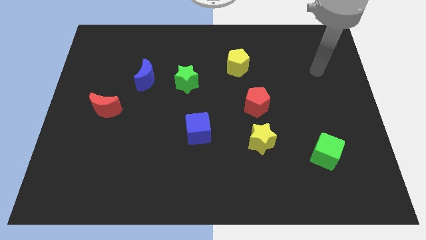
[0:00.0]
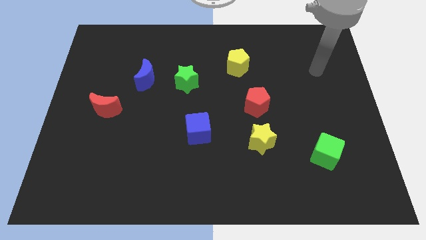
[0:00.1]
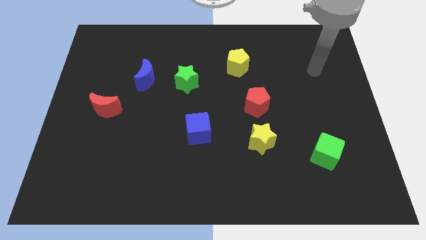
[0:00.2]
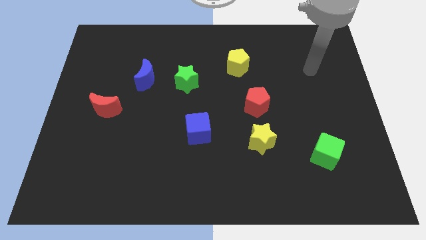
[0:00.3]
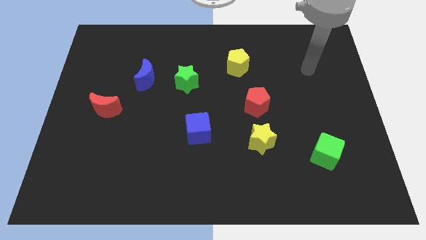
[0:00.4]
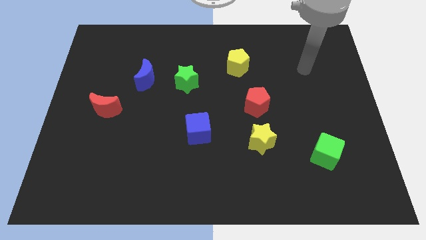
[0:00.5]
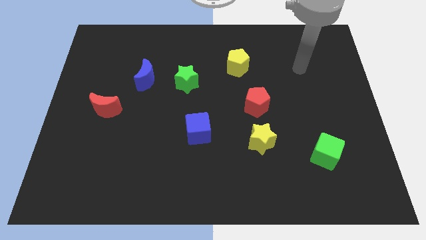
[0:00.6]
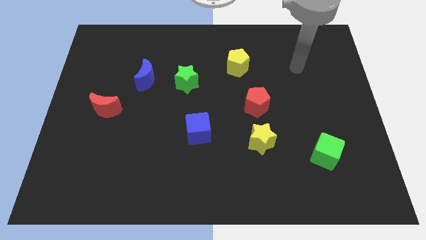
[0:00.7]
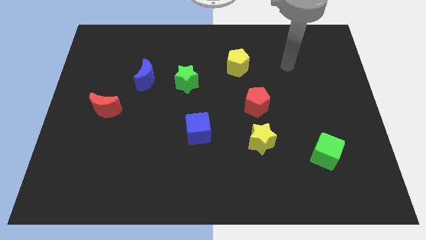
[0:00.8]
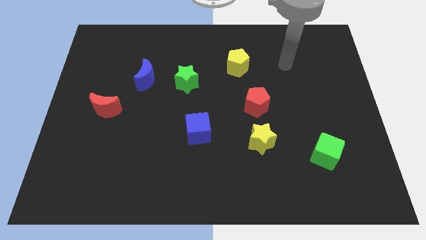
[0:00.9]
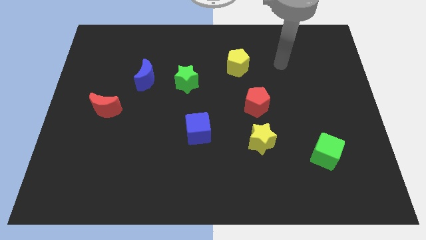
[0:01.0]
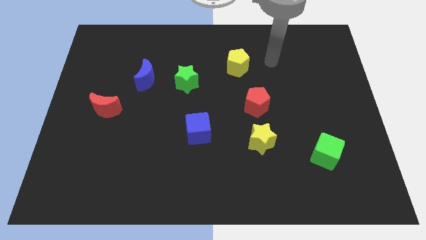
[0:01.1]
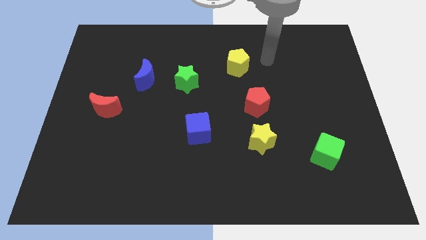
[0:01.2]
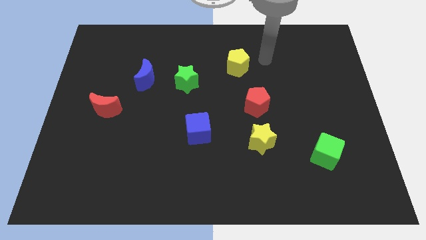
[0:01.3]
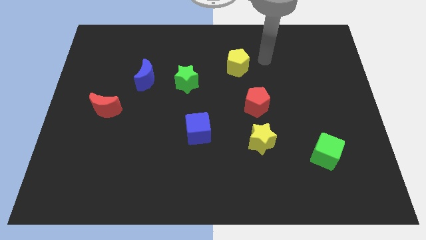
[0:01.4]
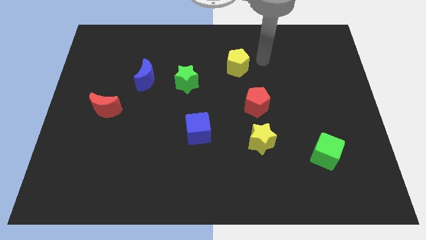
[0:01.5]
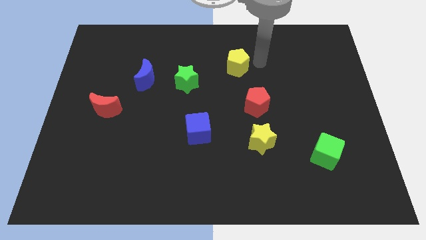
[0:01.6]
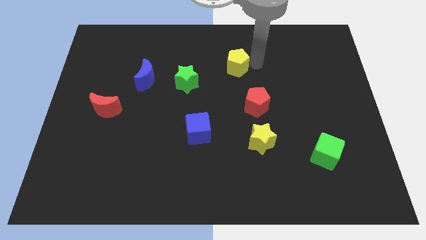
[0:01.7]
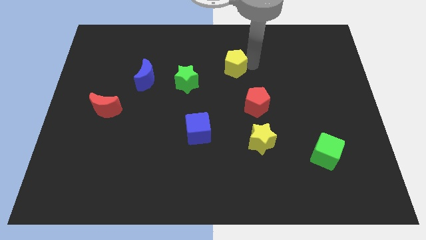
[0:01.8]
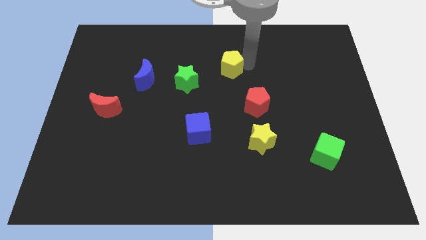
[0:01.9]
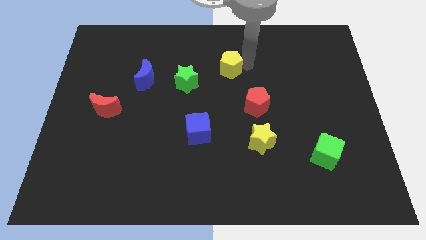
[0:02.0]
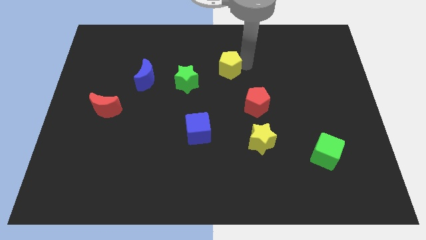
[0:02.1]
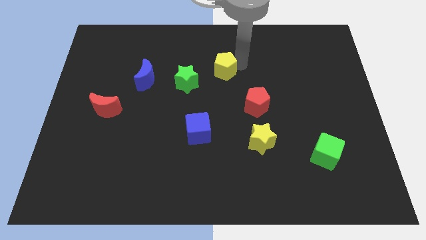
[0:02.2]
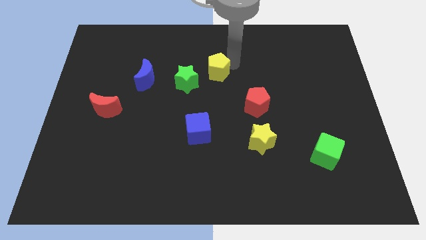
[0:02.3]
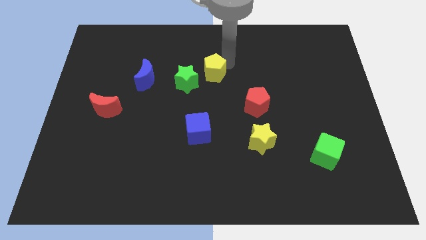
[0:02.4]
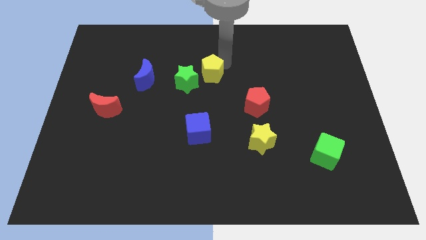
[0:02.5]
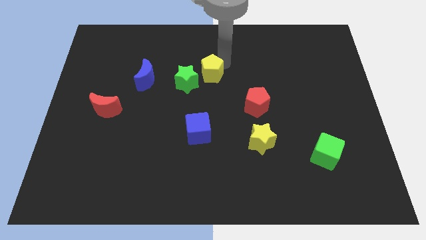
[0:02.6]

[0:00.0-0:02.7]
move yellow pentagon to the green star

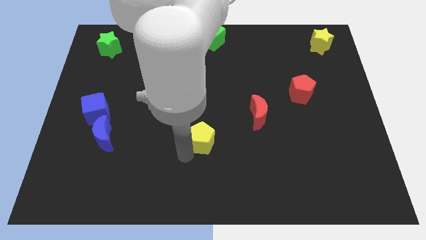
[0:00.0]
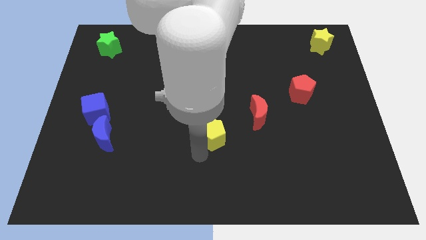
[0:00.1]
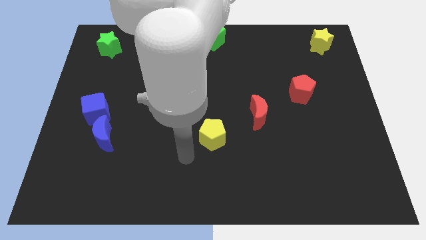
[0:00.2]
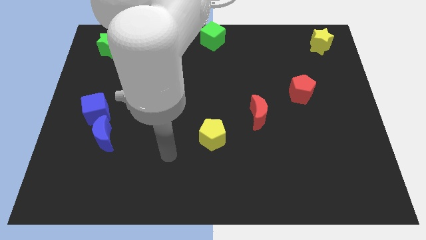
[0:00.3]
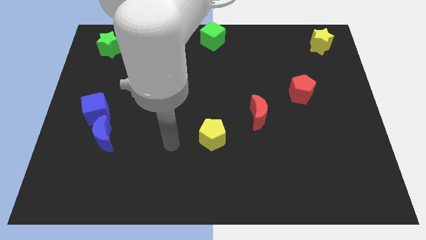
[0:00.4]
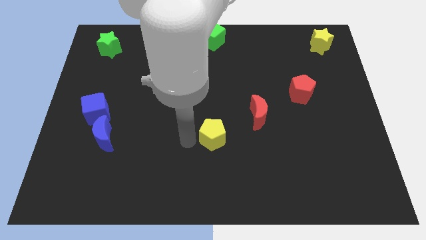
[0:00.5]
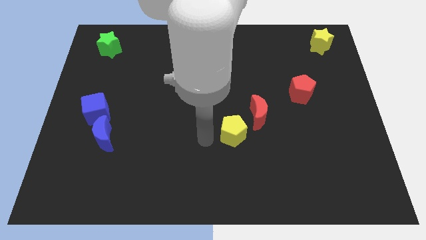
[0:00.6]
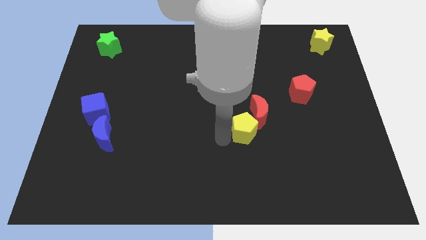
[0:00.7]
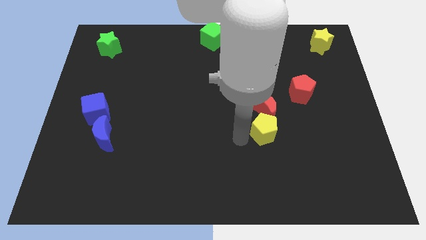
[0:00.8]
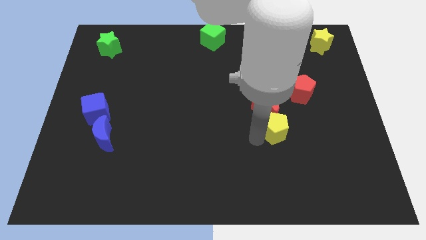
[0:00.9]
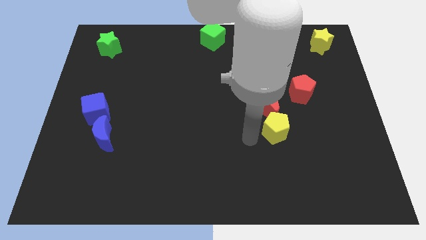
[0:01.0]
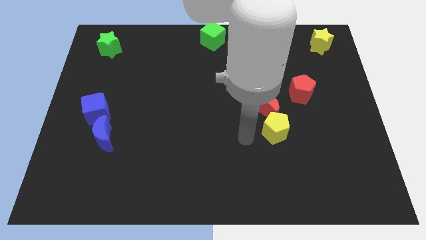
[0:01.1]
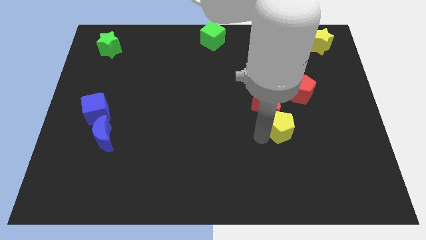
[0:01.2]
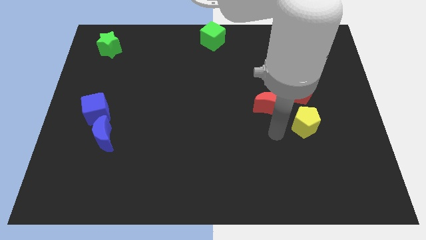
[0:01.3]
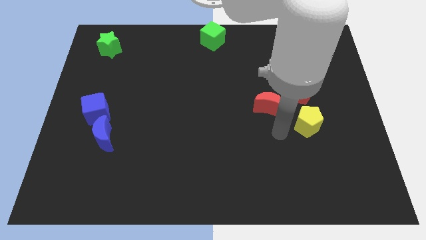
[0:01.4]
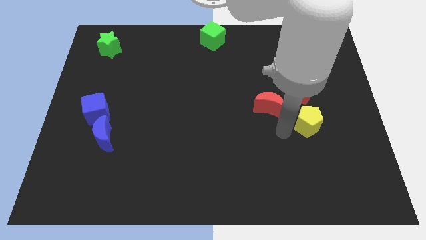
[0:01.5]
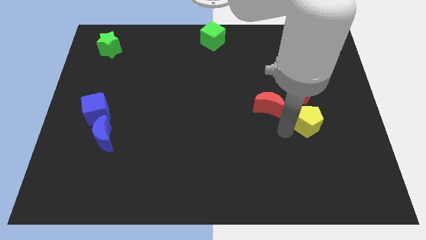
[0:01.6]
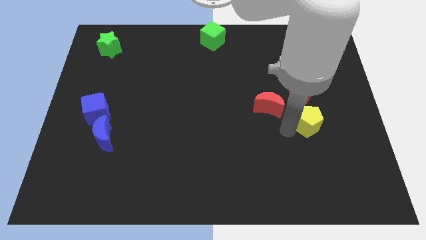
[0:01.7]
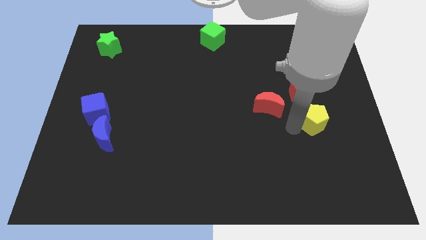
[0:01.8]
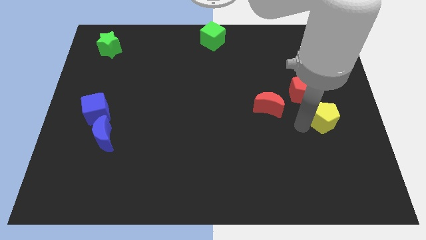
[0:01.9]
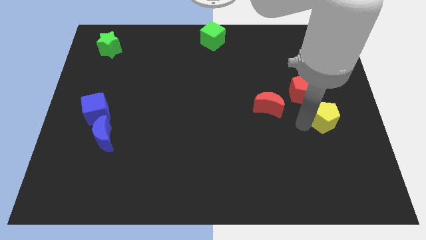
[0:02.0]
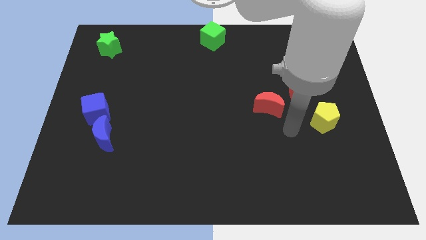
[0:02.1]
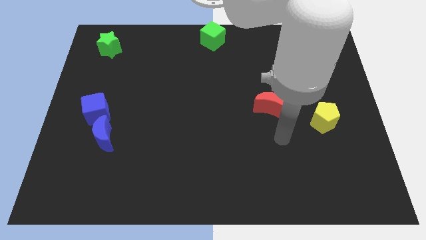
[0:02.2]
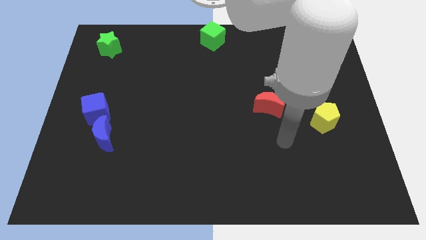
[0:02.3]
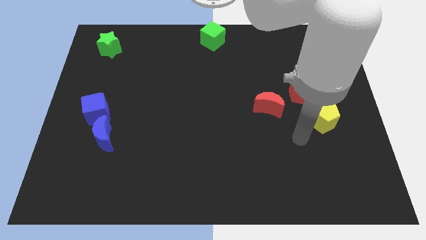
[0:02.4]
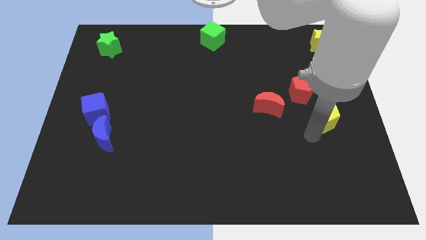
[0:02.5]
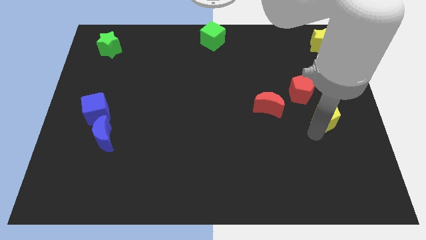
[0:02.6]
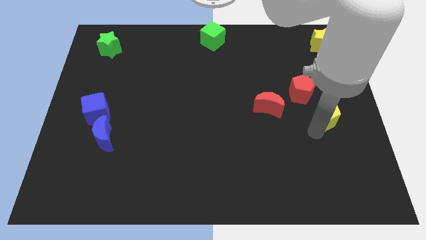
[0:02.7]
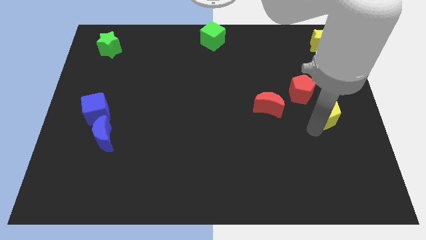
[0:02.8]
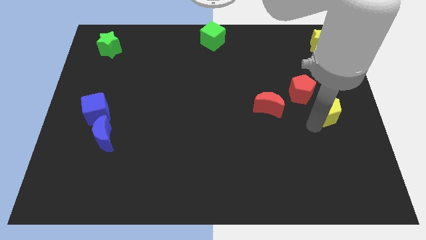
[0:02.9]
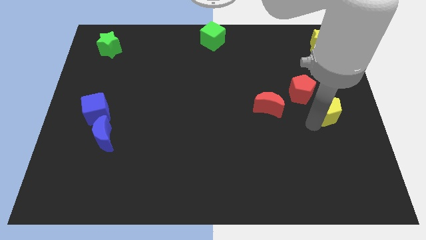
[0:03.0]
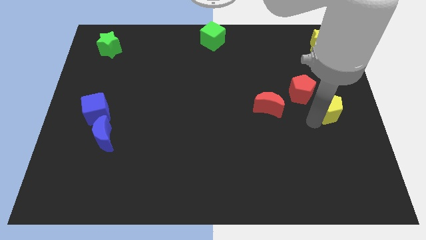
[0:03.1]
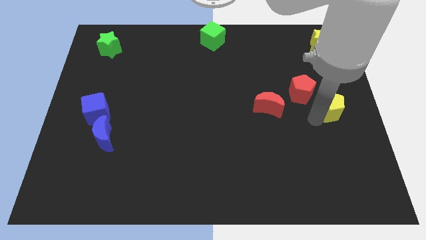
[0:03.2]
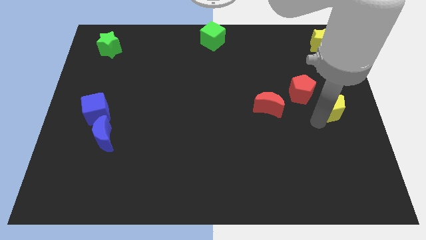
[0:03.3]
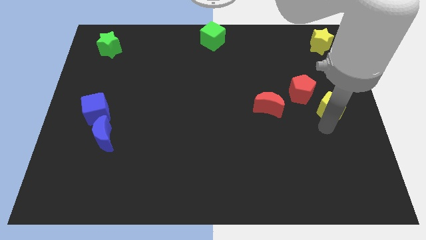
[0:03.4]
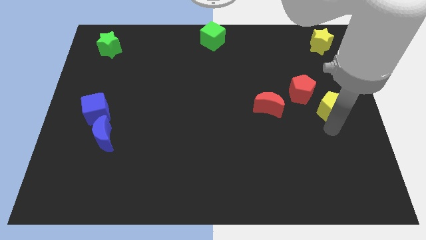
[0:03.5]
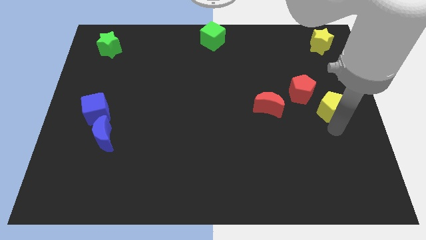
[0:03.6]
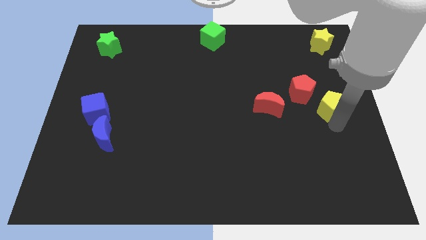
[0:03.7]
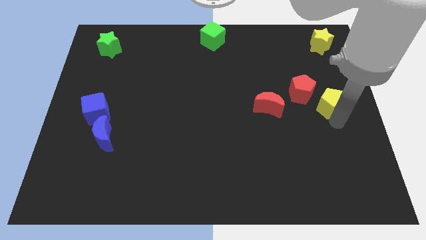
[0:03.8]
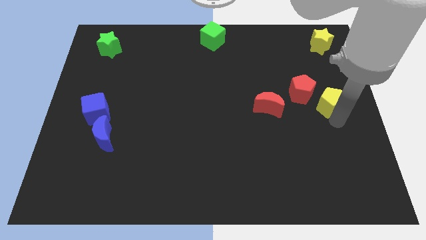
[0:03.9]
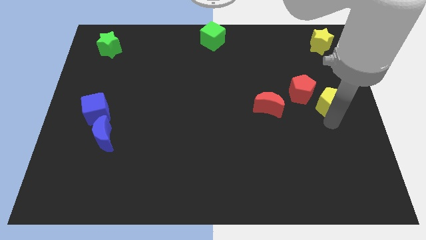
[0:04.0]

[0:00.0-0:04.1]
side yellow pentagon to the right of red moon

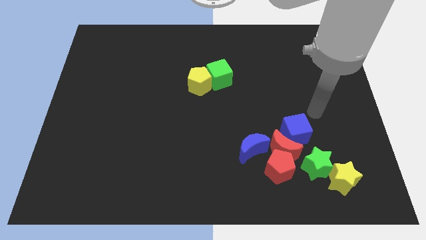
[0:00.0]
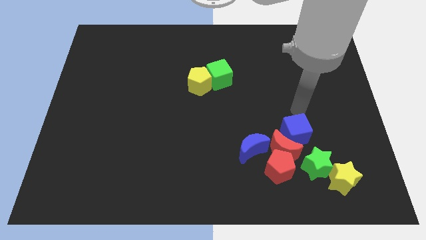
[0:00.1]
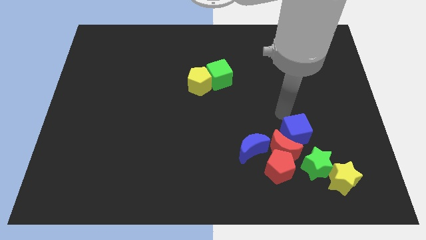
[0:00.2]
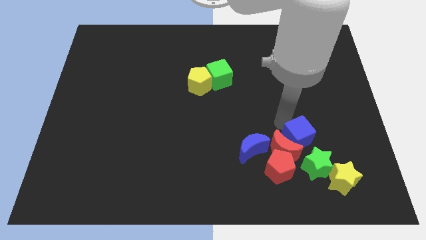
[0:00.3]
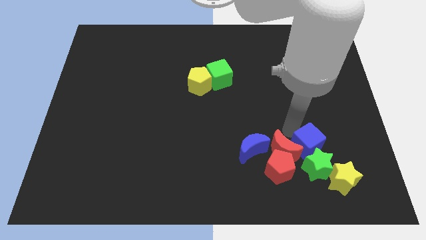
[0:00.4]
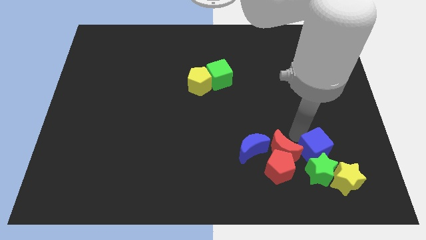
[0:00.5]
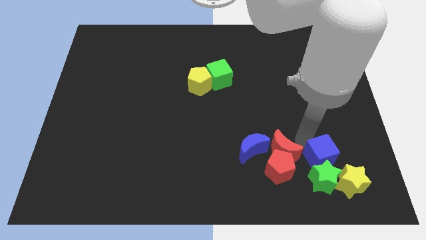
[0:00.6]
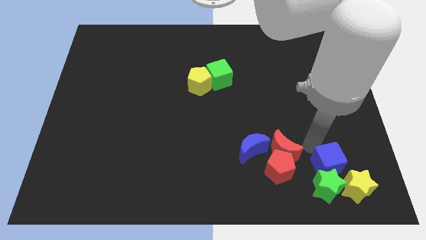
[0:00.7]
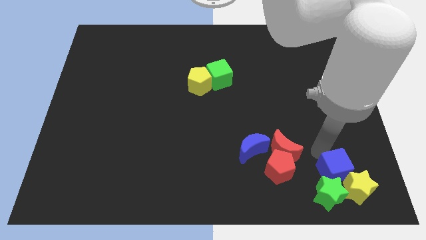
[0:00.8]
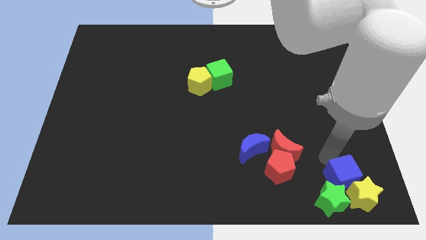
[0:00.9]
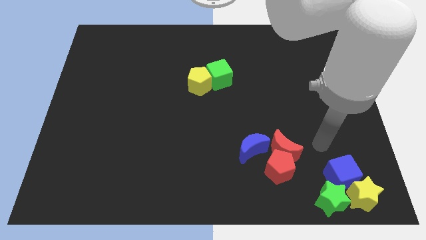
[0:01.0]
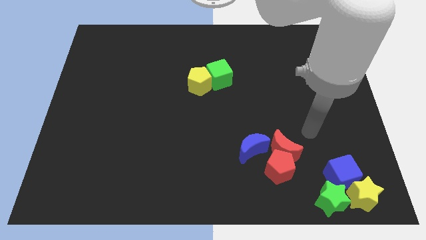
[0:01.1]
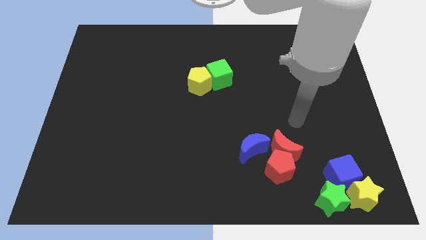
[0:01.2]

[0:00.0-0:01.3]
push the blue cube into the green star

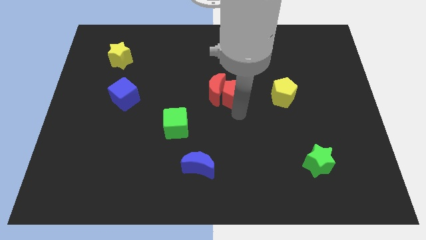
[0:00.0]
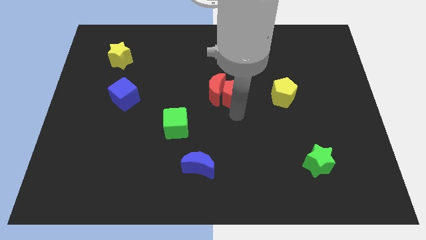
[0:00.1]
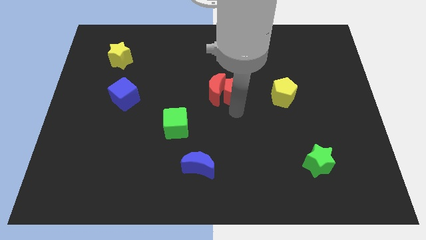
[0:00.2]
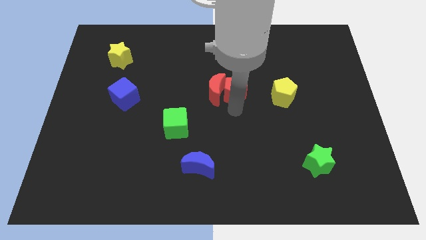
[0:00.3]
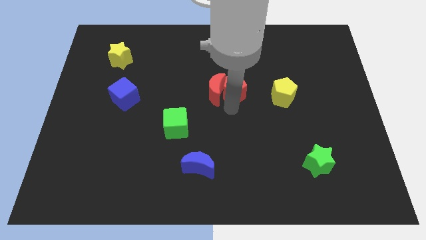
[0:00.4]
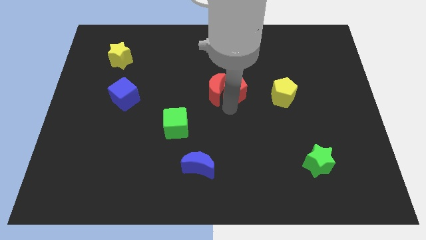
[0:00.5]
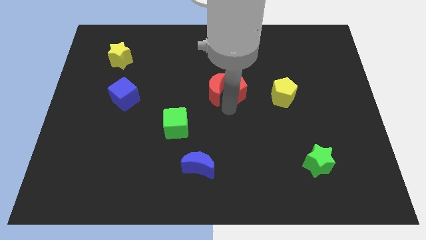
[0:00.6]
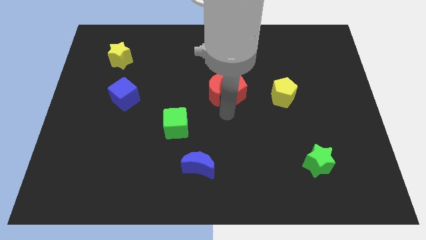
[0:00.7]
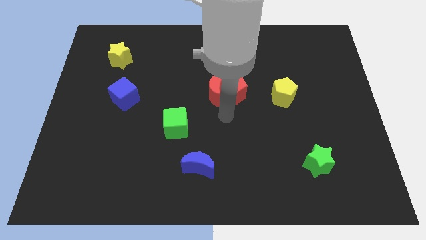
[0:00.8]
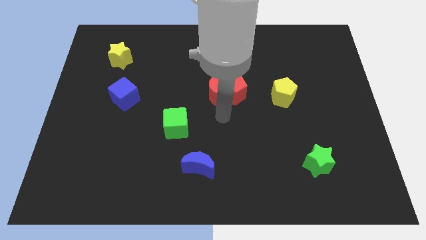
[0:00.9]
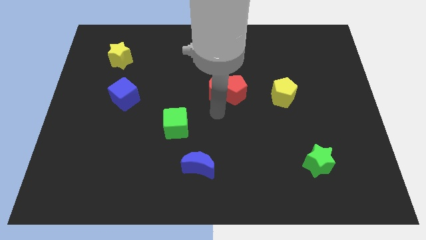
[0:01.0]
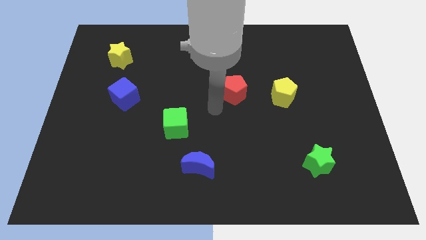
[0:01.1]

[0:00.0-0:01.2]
slightly move red pentagon
